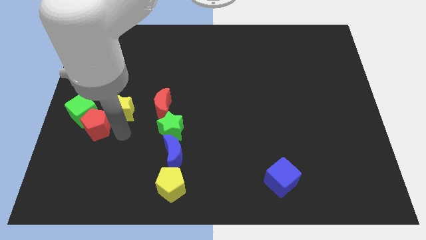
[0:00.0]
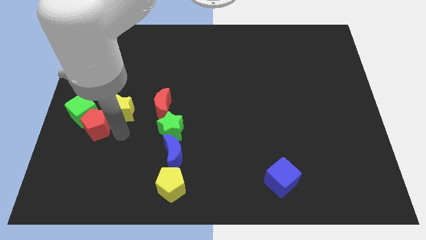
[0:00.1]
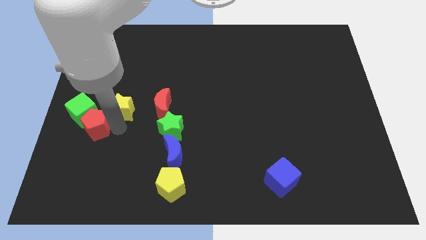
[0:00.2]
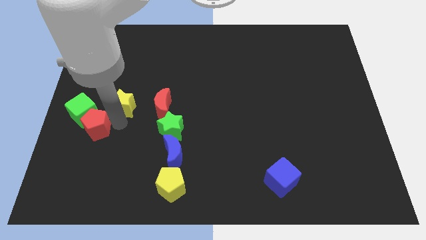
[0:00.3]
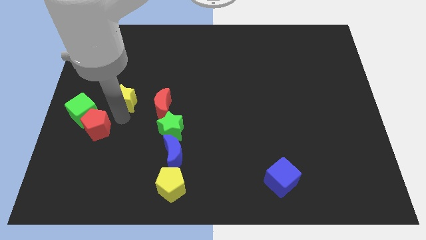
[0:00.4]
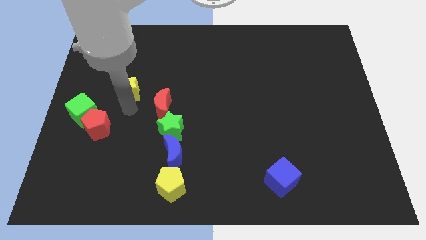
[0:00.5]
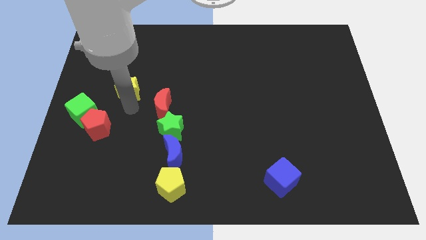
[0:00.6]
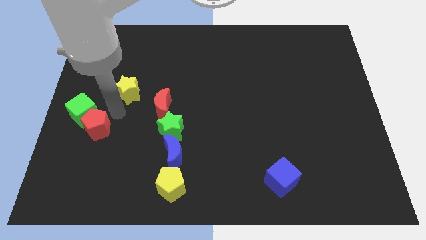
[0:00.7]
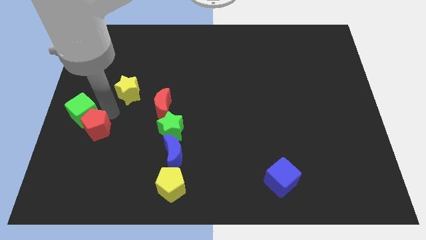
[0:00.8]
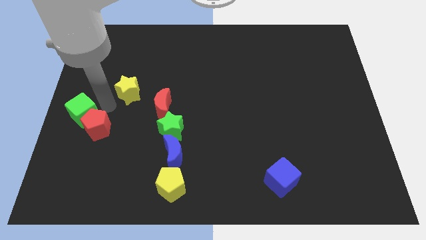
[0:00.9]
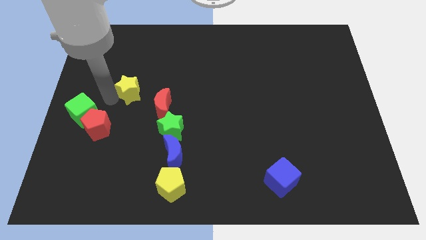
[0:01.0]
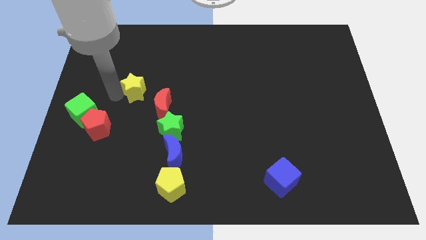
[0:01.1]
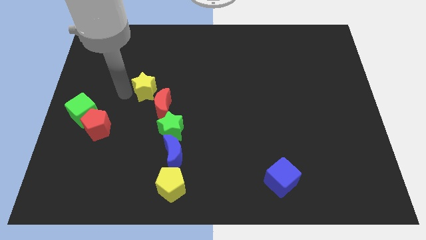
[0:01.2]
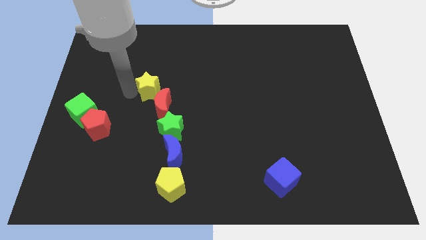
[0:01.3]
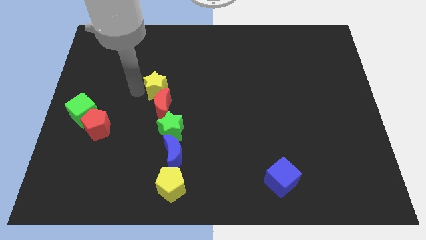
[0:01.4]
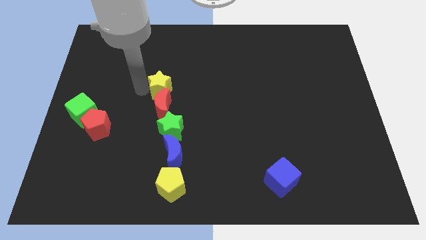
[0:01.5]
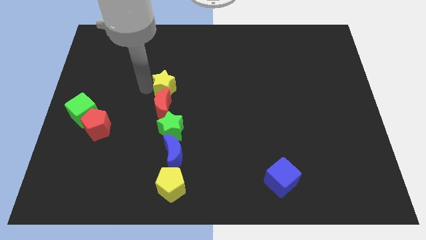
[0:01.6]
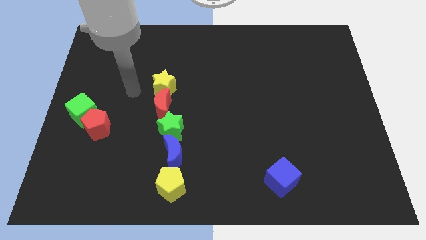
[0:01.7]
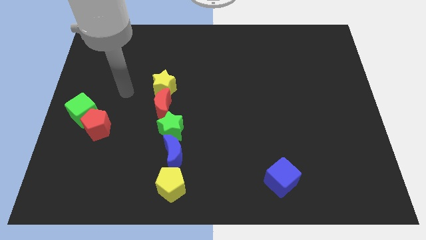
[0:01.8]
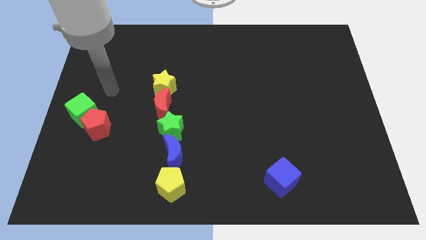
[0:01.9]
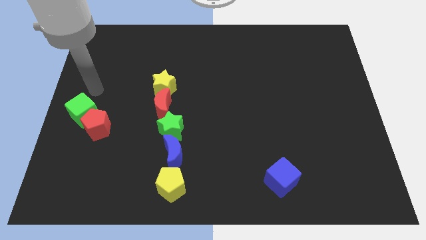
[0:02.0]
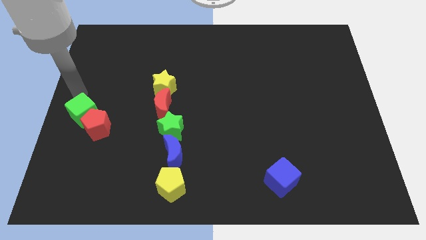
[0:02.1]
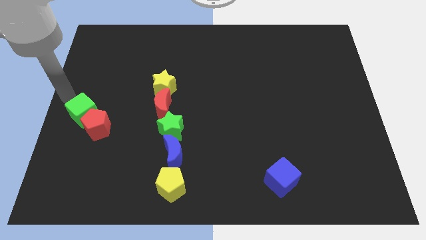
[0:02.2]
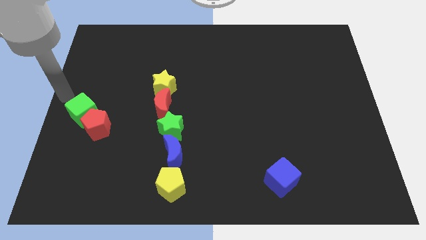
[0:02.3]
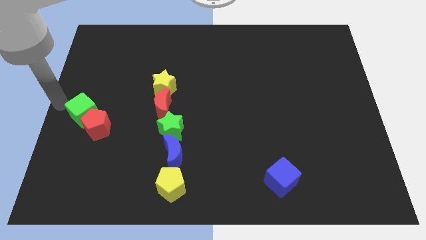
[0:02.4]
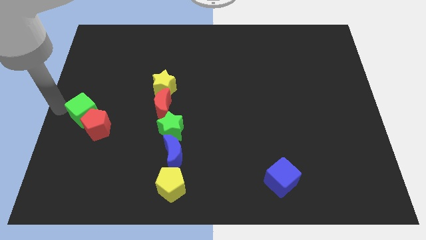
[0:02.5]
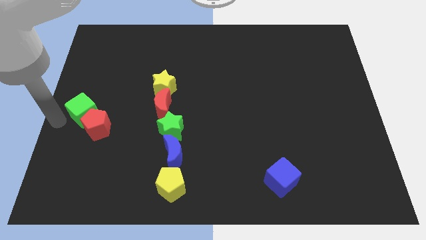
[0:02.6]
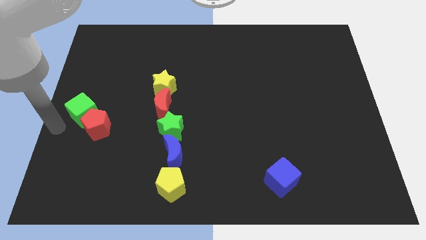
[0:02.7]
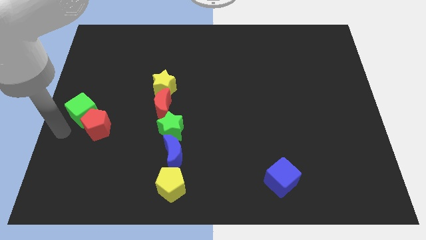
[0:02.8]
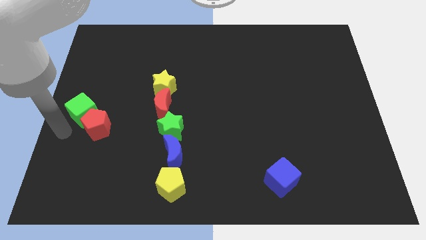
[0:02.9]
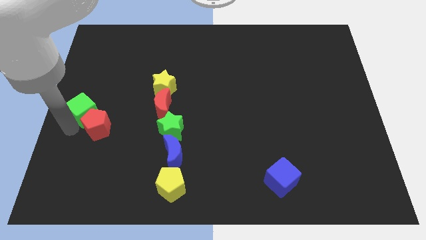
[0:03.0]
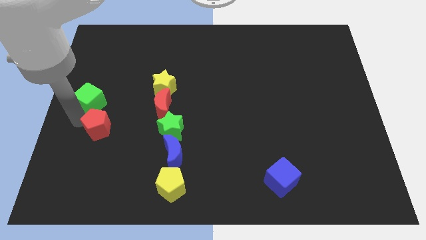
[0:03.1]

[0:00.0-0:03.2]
move the yellow star to the top of the red crescent

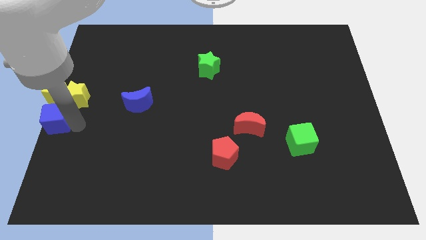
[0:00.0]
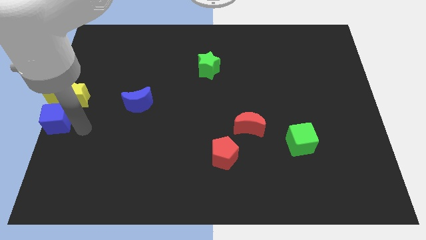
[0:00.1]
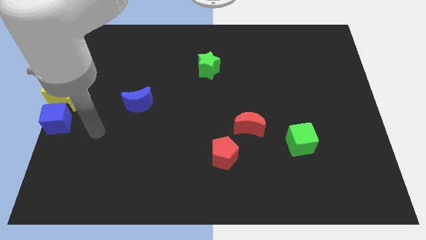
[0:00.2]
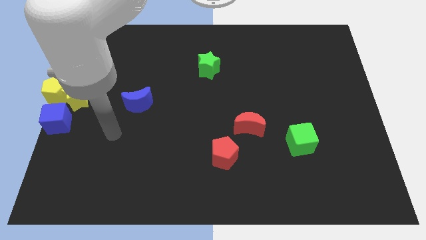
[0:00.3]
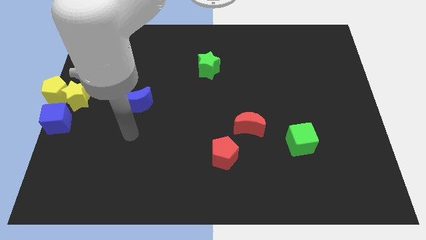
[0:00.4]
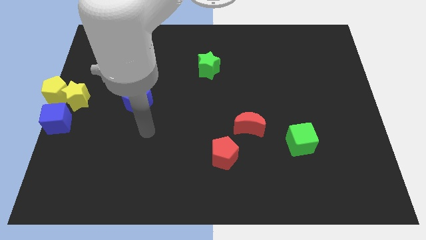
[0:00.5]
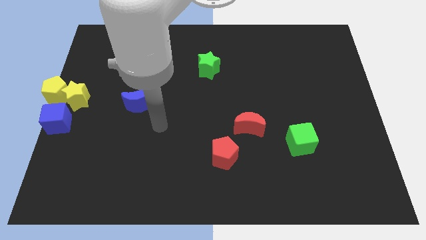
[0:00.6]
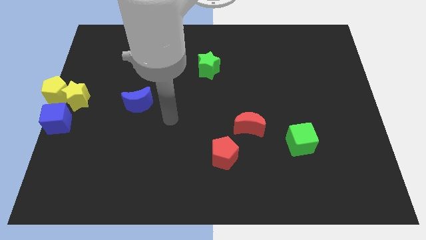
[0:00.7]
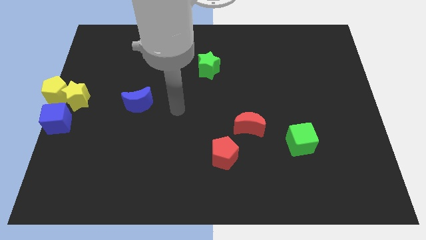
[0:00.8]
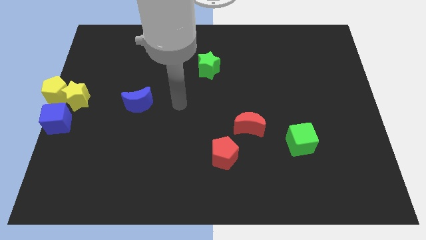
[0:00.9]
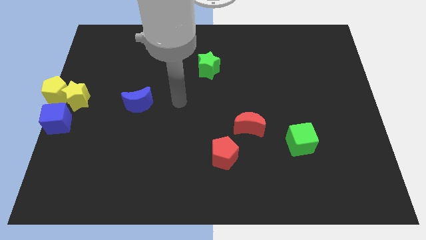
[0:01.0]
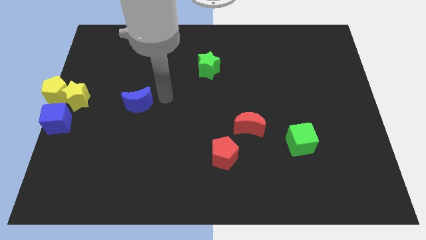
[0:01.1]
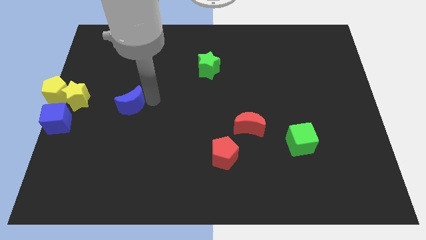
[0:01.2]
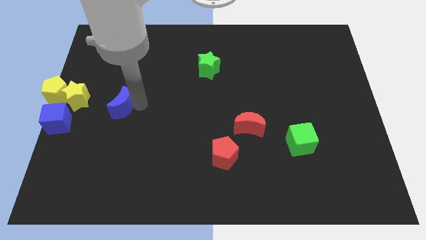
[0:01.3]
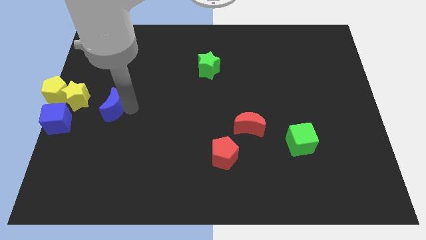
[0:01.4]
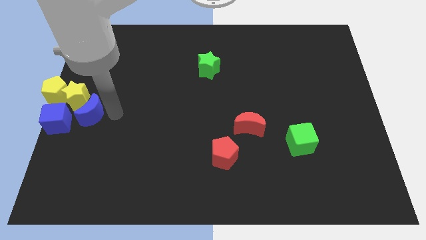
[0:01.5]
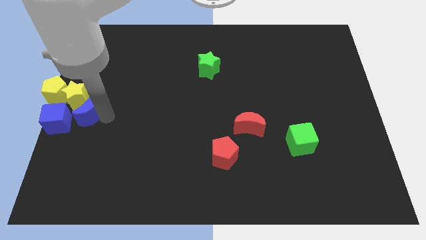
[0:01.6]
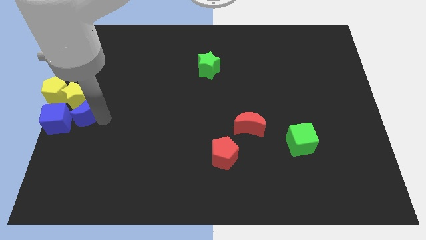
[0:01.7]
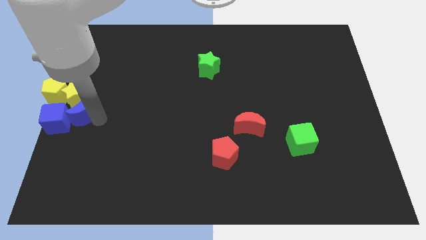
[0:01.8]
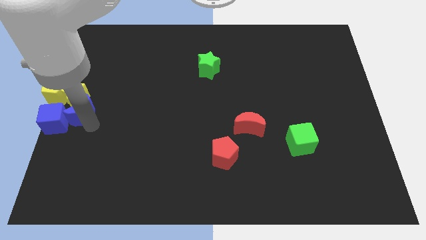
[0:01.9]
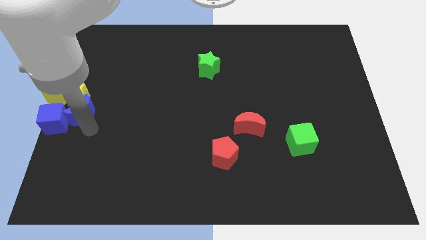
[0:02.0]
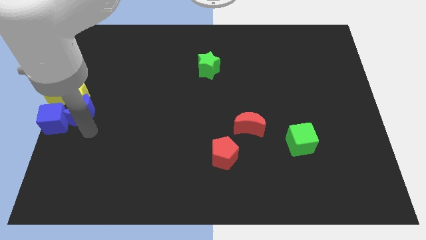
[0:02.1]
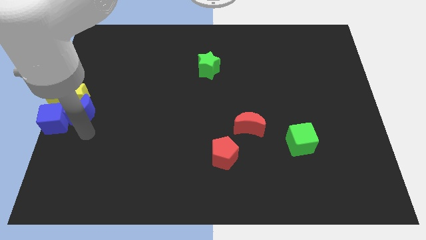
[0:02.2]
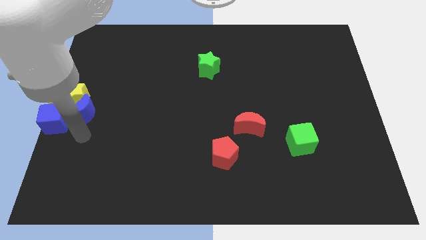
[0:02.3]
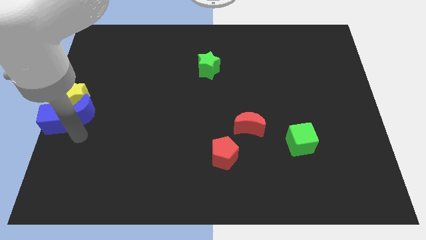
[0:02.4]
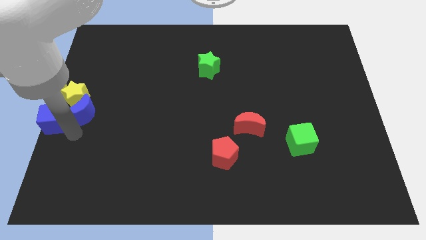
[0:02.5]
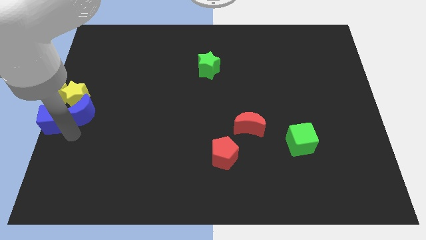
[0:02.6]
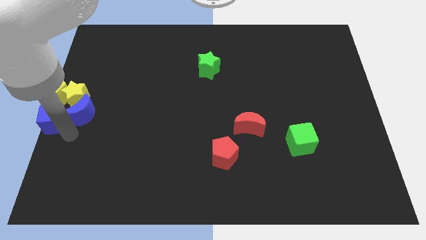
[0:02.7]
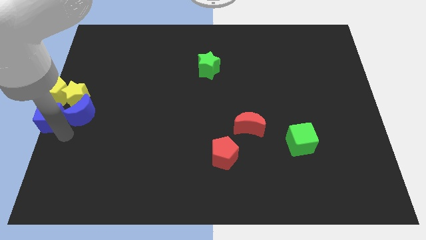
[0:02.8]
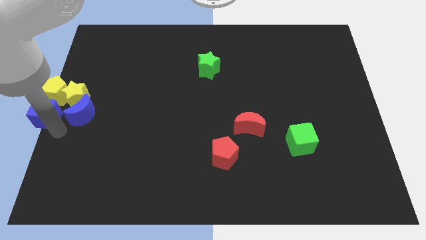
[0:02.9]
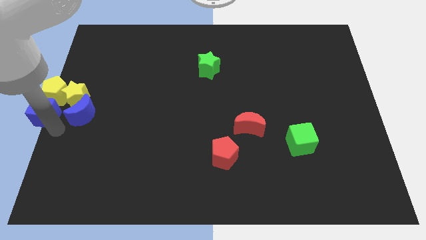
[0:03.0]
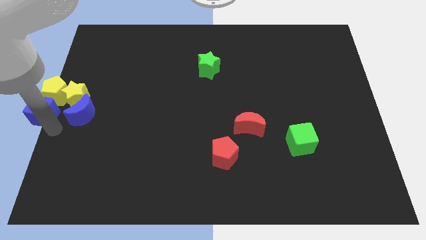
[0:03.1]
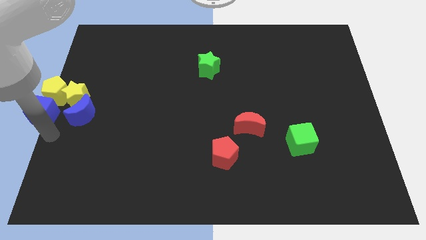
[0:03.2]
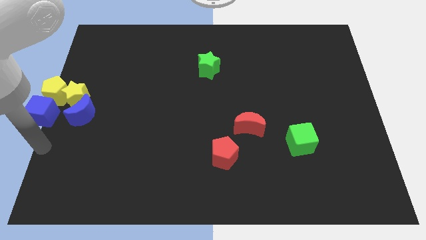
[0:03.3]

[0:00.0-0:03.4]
push the blue moon into the blue cube

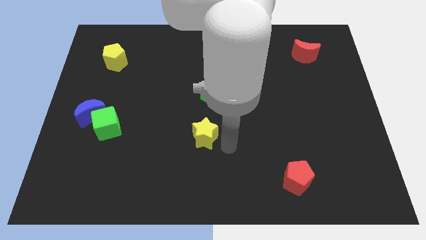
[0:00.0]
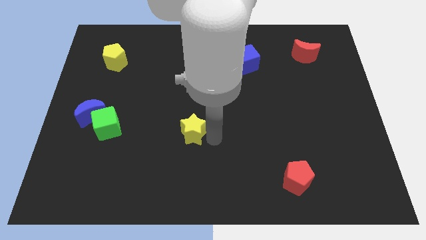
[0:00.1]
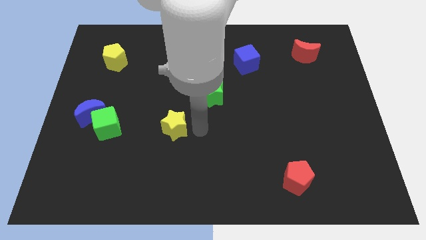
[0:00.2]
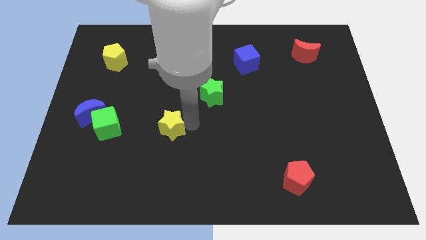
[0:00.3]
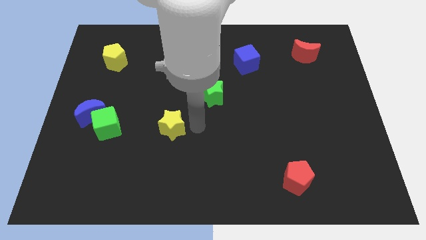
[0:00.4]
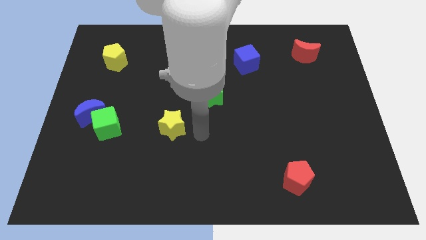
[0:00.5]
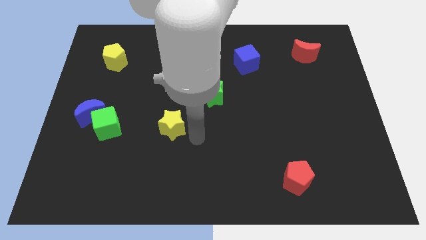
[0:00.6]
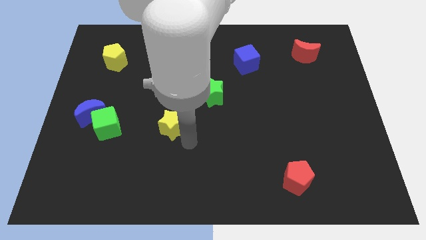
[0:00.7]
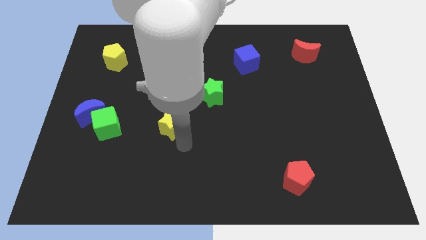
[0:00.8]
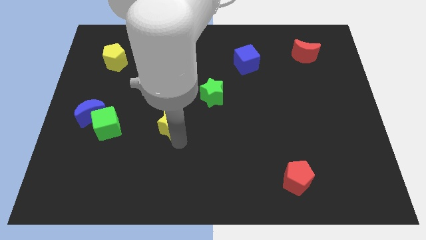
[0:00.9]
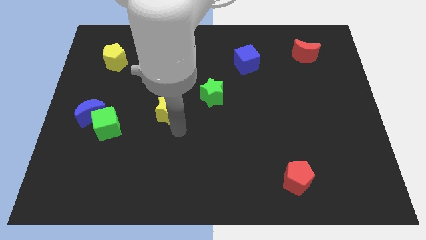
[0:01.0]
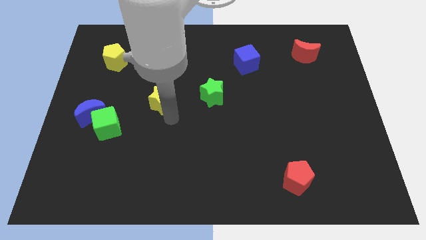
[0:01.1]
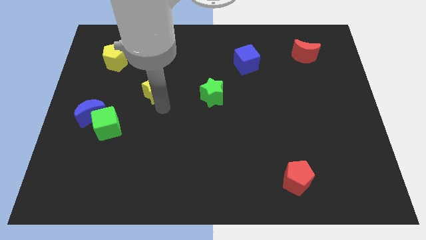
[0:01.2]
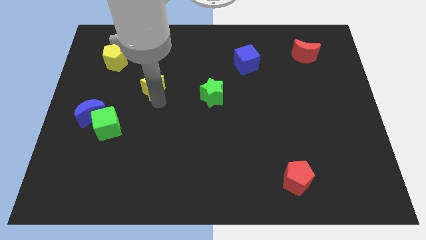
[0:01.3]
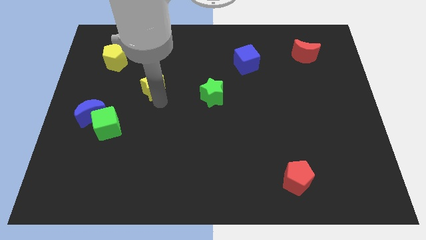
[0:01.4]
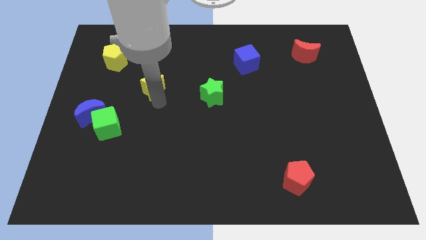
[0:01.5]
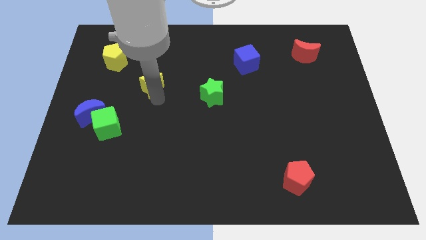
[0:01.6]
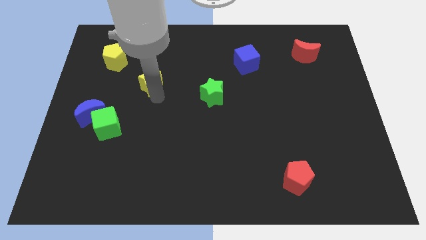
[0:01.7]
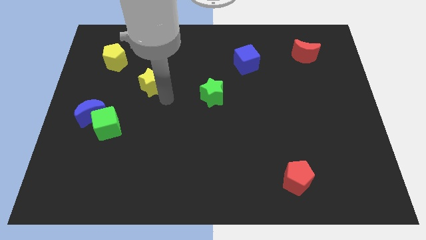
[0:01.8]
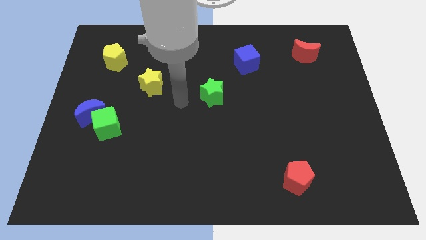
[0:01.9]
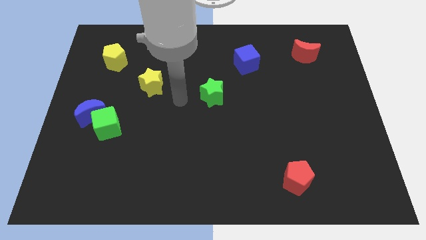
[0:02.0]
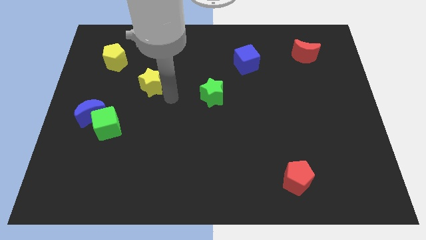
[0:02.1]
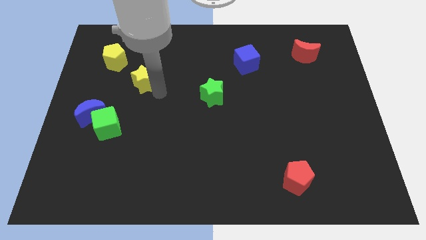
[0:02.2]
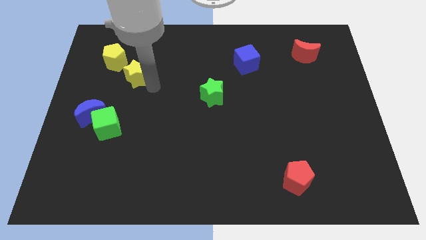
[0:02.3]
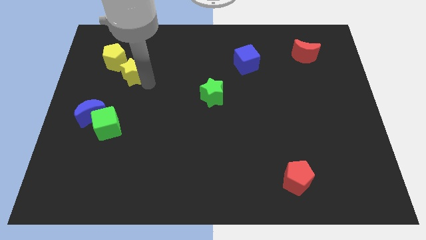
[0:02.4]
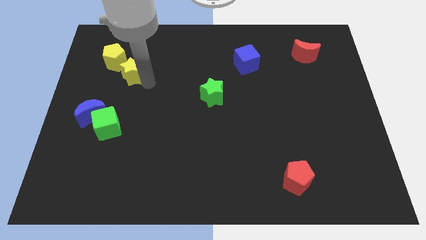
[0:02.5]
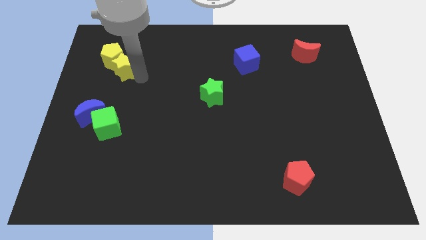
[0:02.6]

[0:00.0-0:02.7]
put yellow blocks together
